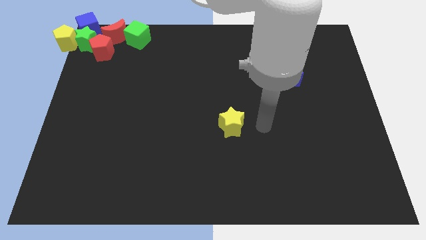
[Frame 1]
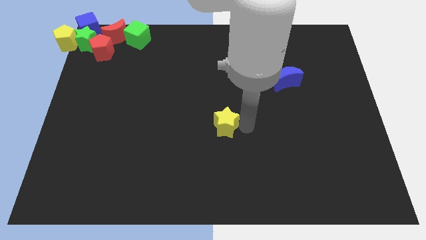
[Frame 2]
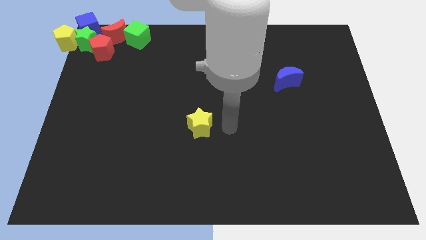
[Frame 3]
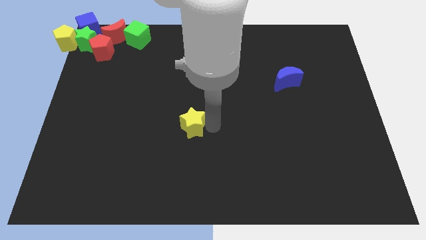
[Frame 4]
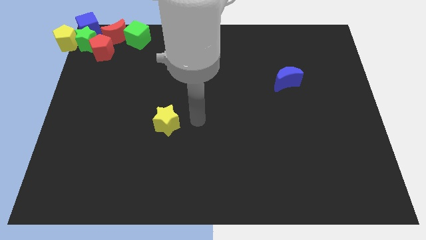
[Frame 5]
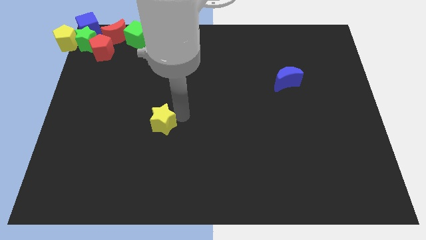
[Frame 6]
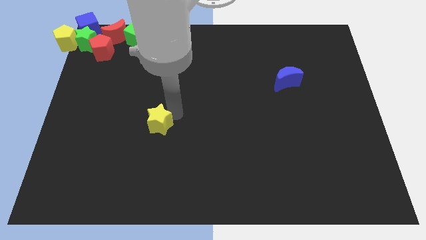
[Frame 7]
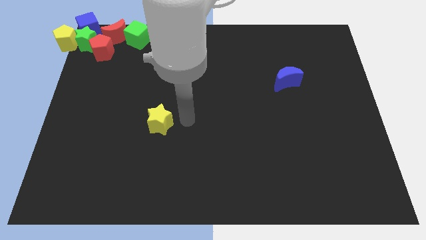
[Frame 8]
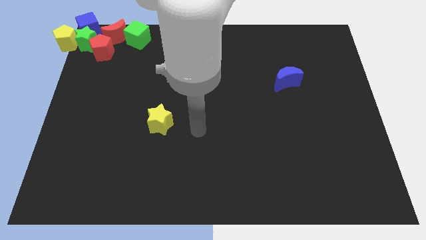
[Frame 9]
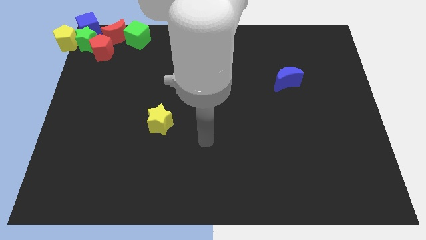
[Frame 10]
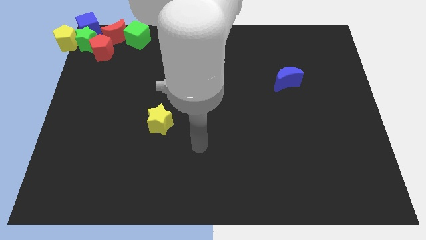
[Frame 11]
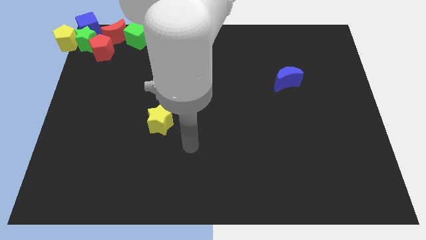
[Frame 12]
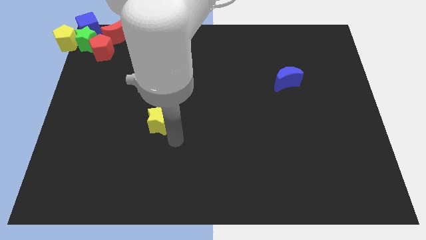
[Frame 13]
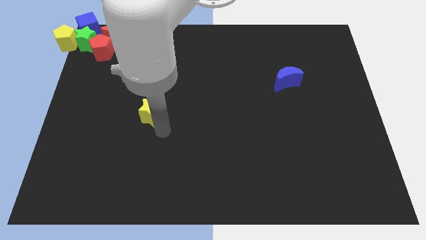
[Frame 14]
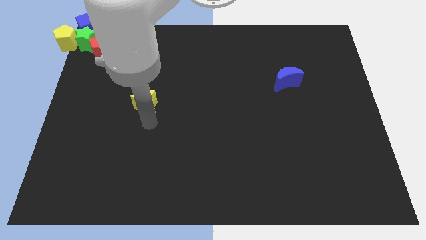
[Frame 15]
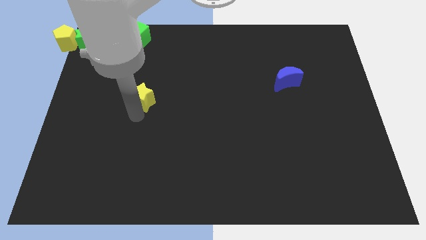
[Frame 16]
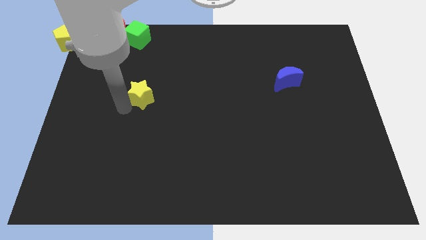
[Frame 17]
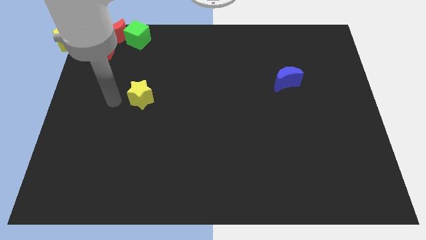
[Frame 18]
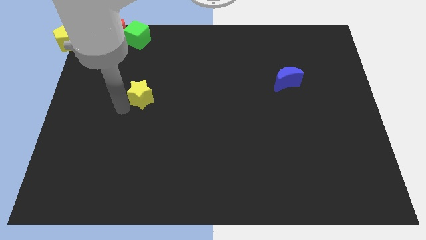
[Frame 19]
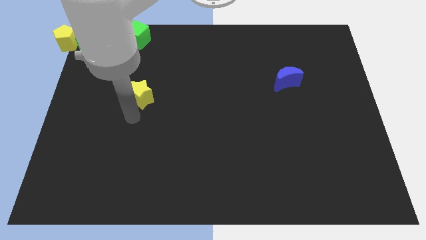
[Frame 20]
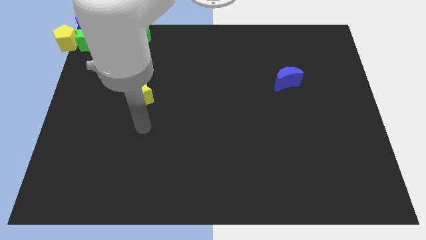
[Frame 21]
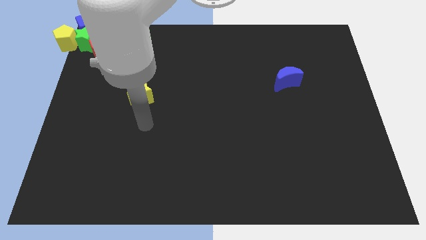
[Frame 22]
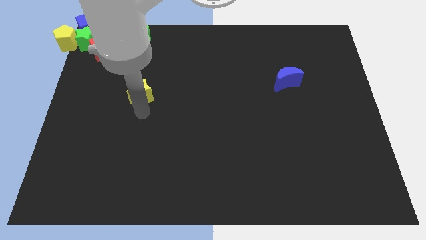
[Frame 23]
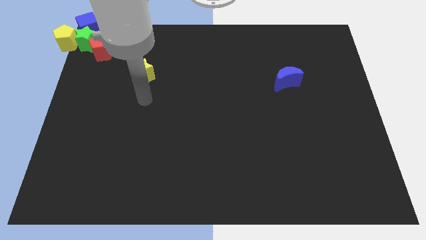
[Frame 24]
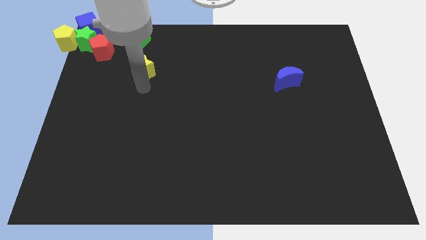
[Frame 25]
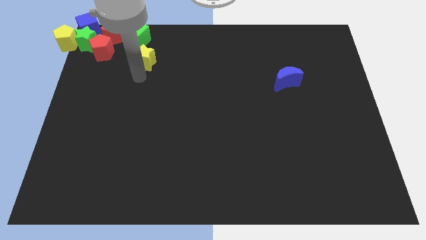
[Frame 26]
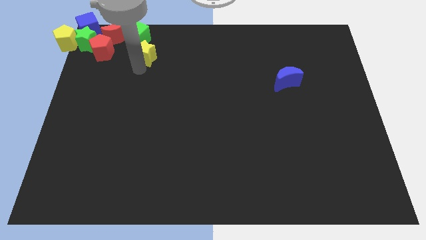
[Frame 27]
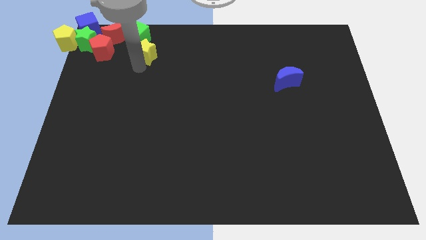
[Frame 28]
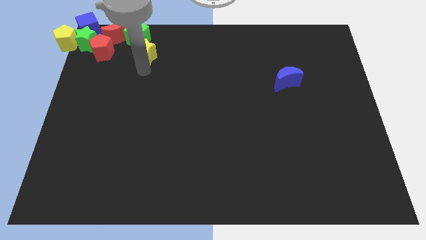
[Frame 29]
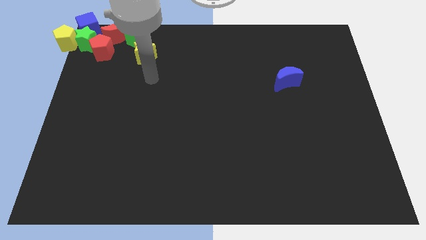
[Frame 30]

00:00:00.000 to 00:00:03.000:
place the yellow star down to the green cube

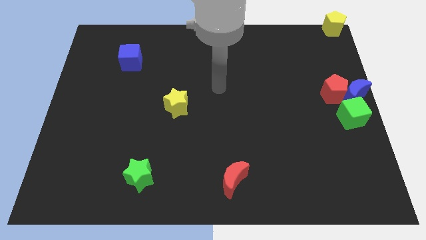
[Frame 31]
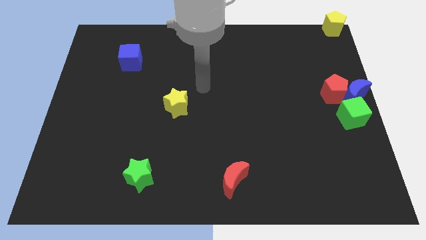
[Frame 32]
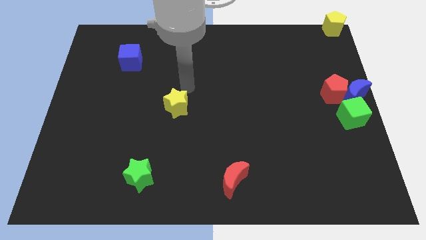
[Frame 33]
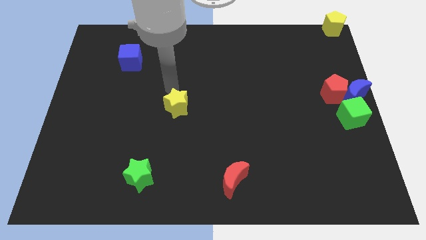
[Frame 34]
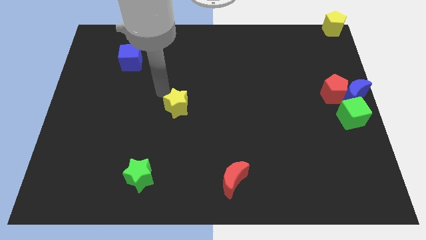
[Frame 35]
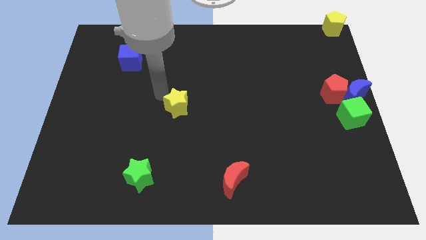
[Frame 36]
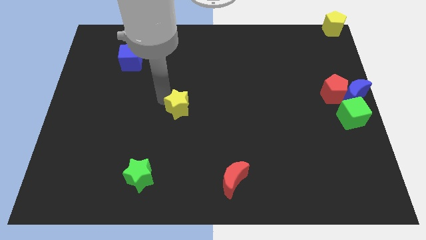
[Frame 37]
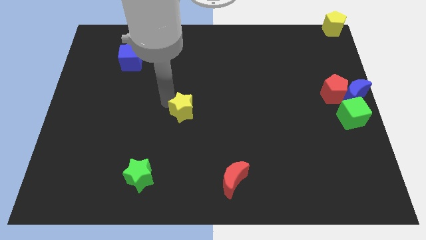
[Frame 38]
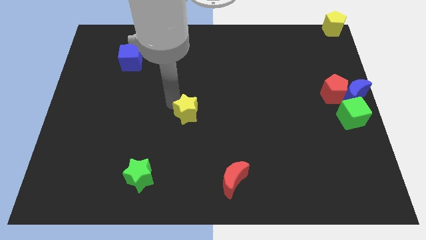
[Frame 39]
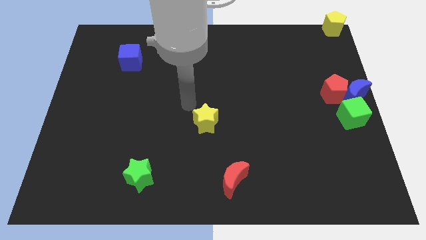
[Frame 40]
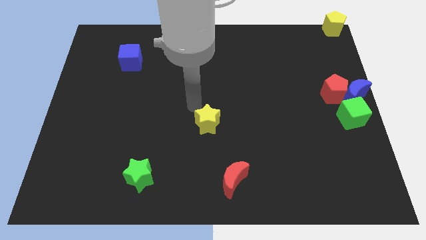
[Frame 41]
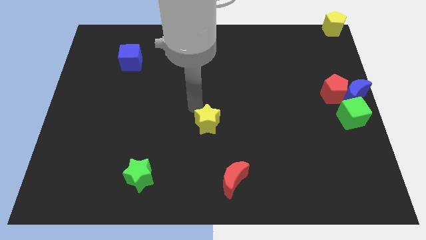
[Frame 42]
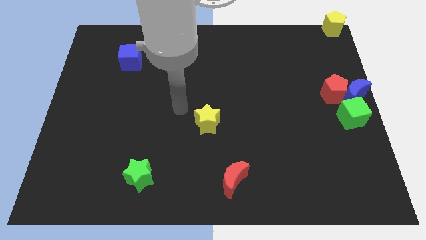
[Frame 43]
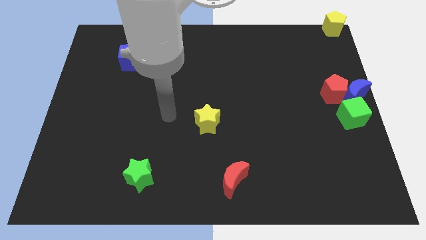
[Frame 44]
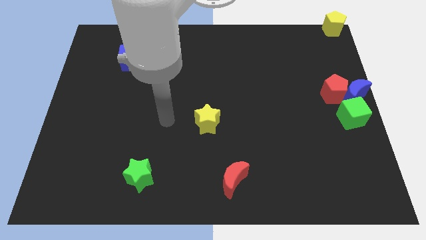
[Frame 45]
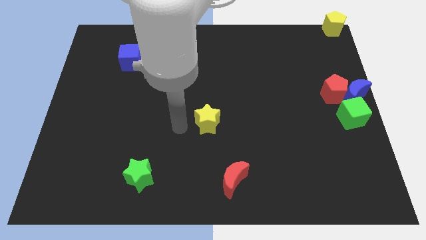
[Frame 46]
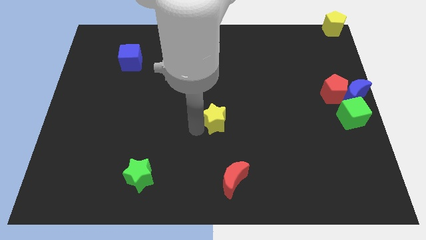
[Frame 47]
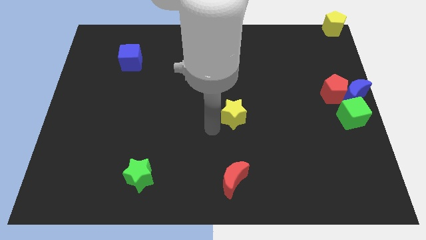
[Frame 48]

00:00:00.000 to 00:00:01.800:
place the yellow star at top side of the red crescent

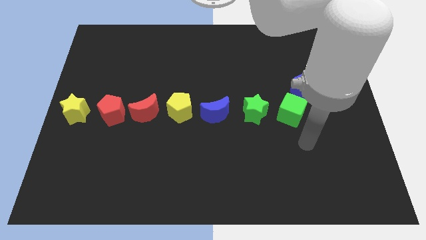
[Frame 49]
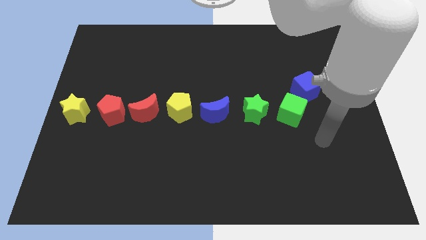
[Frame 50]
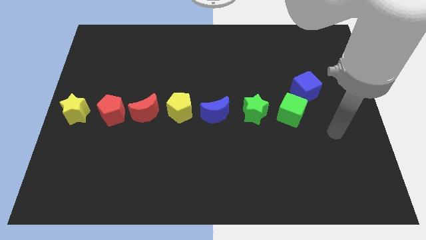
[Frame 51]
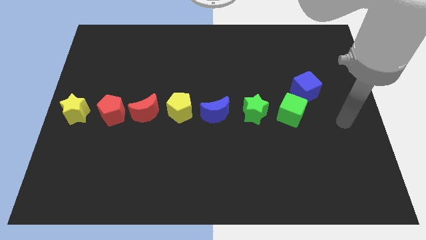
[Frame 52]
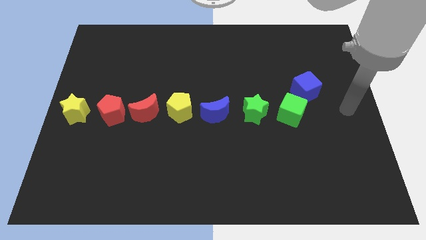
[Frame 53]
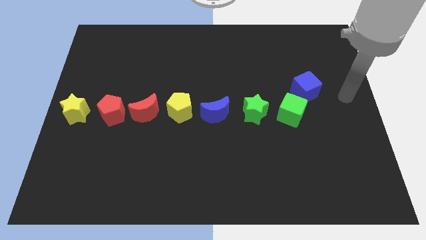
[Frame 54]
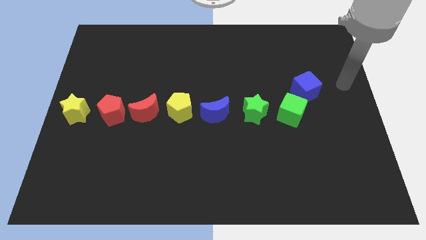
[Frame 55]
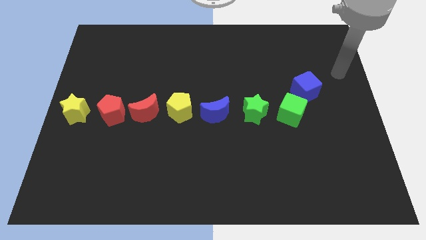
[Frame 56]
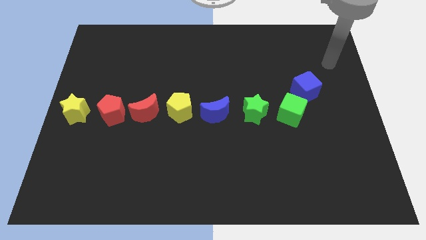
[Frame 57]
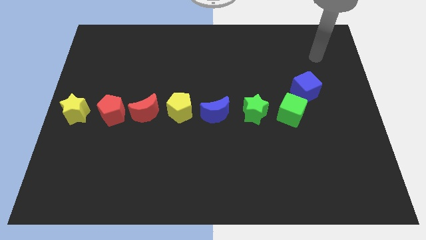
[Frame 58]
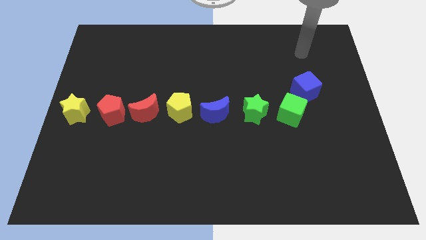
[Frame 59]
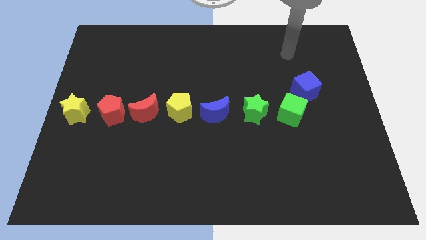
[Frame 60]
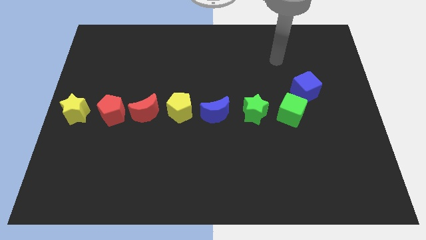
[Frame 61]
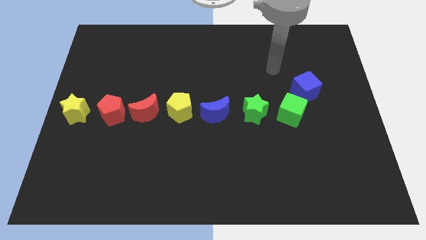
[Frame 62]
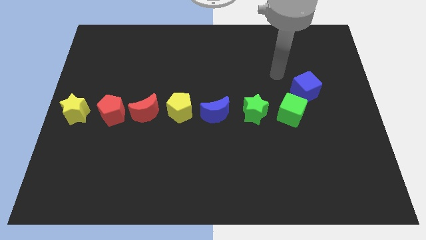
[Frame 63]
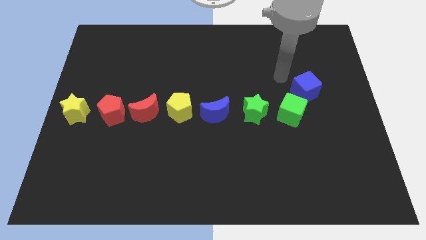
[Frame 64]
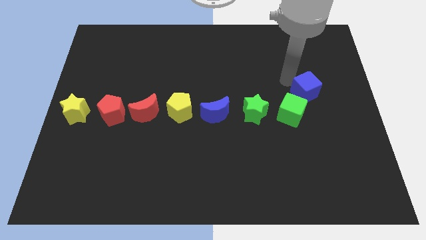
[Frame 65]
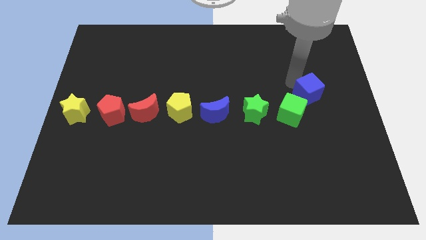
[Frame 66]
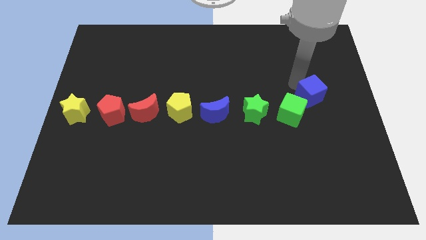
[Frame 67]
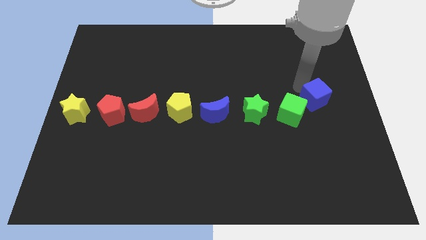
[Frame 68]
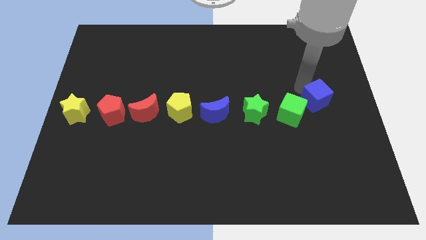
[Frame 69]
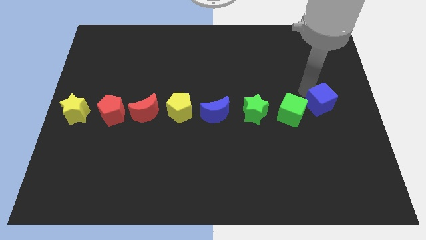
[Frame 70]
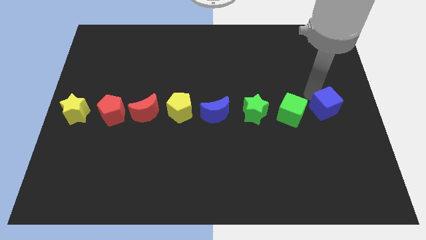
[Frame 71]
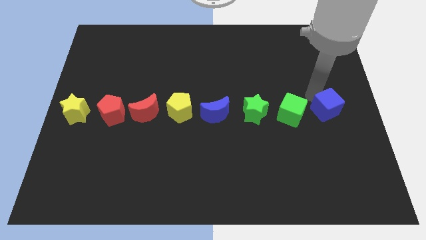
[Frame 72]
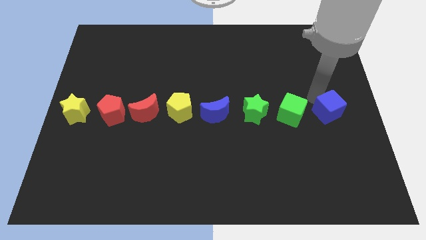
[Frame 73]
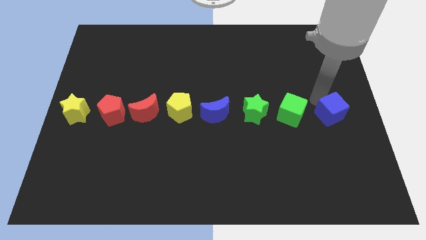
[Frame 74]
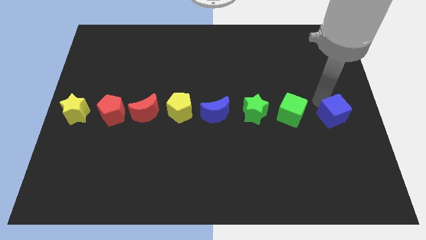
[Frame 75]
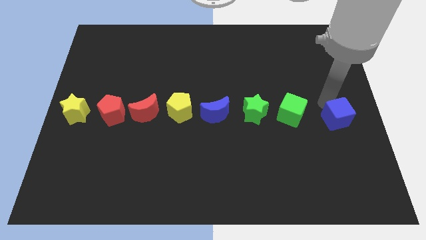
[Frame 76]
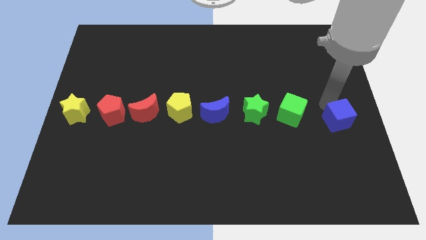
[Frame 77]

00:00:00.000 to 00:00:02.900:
place blue cube beside green cube

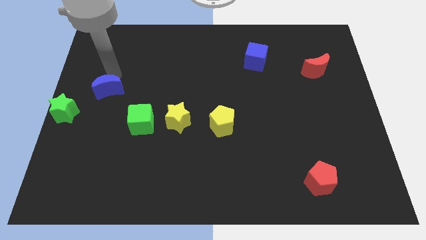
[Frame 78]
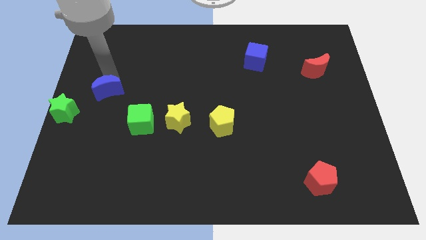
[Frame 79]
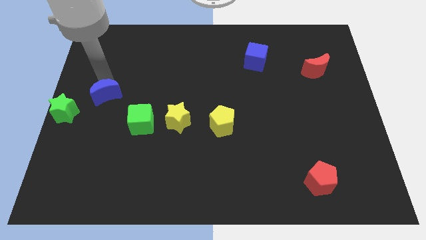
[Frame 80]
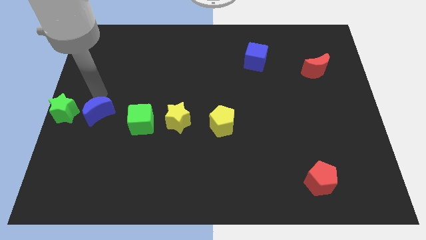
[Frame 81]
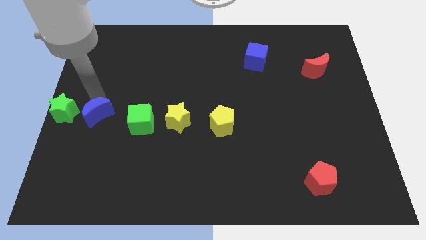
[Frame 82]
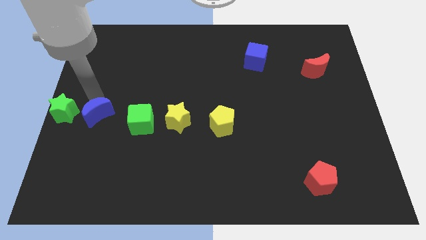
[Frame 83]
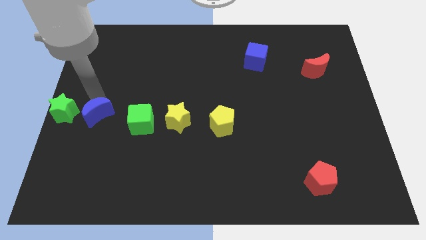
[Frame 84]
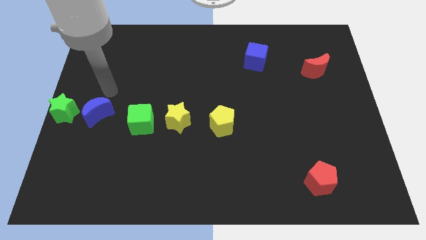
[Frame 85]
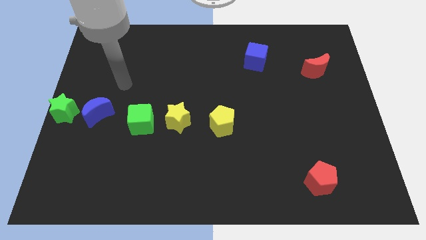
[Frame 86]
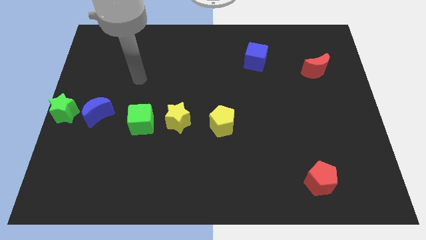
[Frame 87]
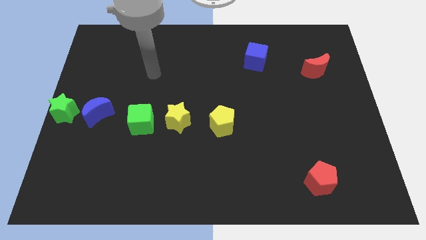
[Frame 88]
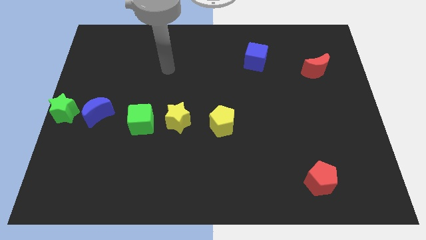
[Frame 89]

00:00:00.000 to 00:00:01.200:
move the blue moon right beside the green star
